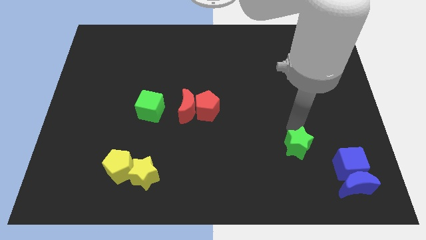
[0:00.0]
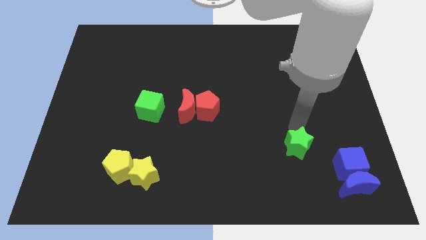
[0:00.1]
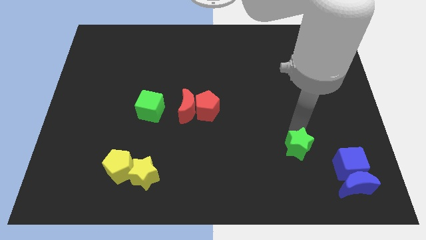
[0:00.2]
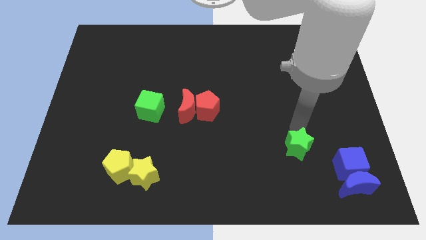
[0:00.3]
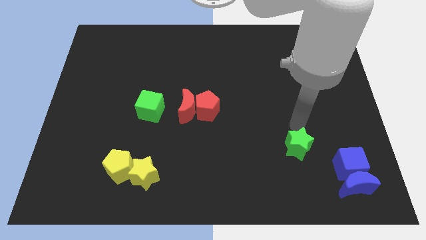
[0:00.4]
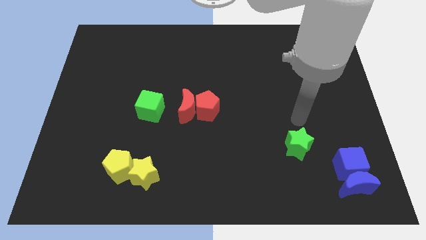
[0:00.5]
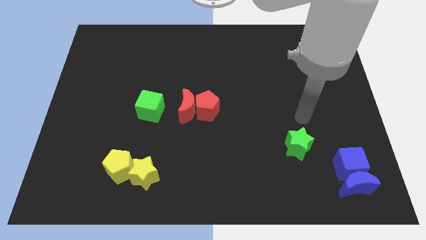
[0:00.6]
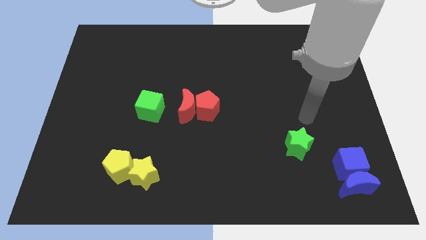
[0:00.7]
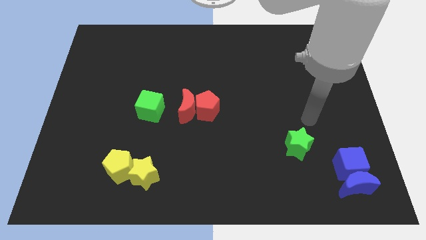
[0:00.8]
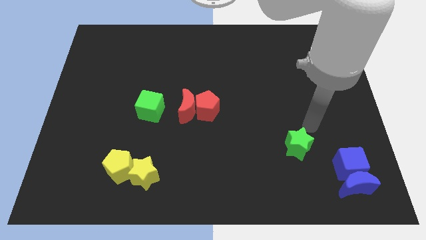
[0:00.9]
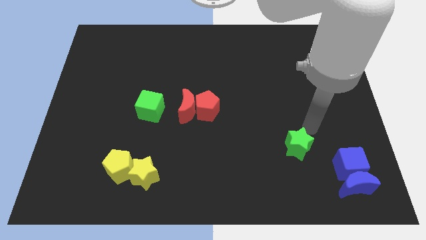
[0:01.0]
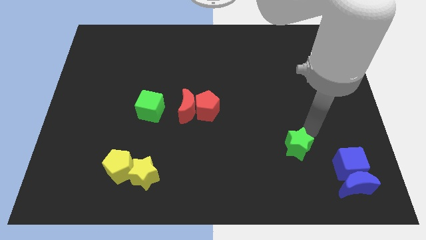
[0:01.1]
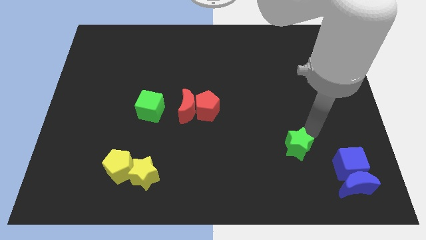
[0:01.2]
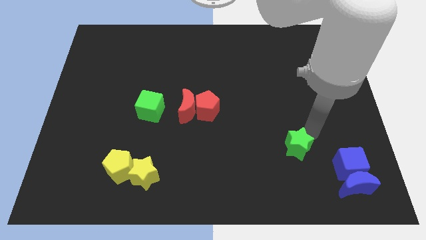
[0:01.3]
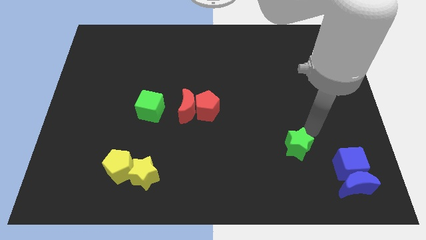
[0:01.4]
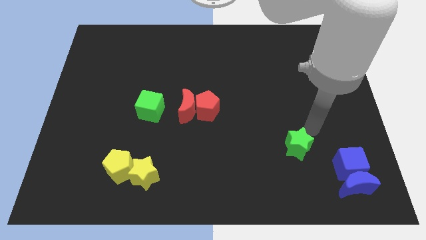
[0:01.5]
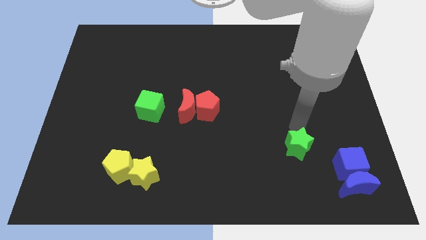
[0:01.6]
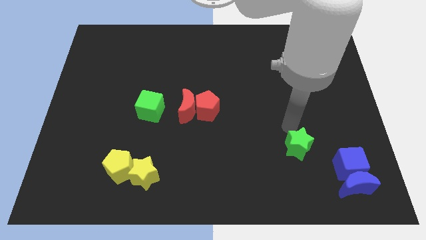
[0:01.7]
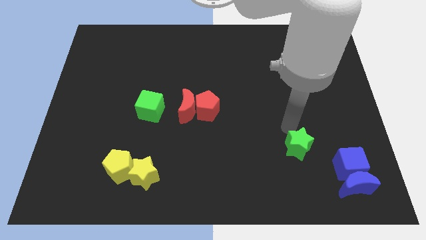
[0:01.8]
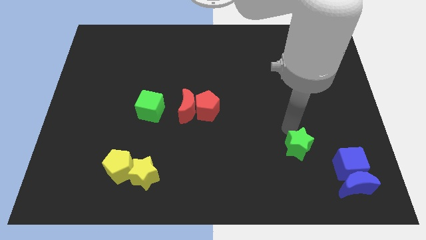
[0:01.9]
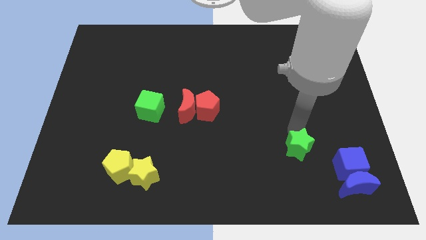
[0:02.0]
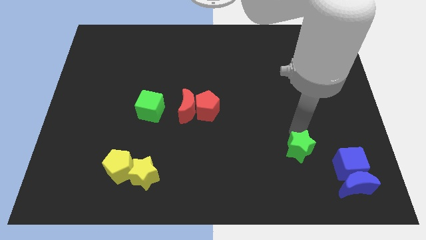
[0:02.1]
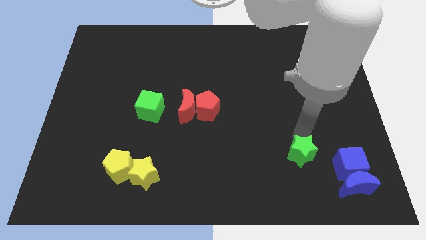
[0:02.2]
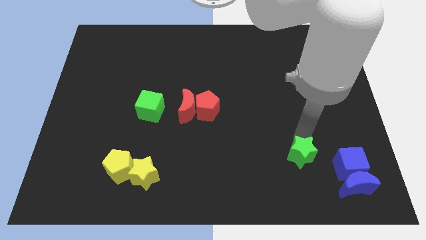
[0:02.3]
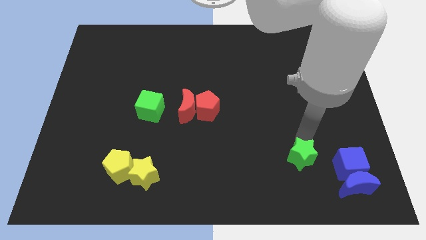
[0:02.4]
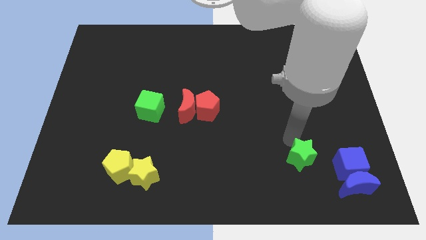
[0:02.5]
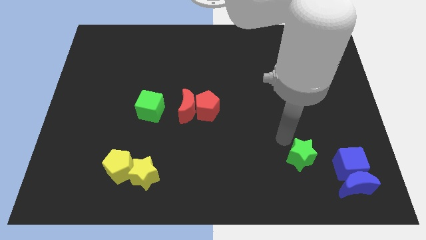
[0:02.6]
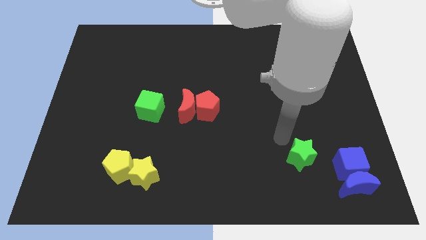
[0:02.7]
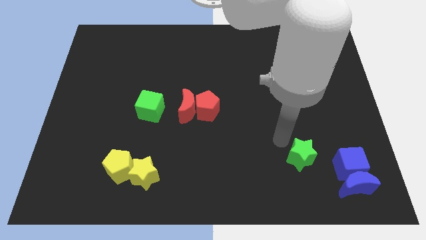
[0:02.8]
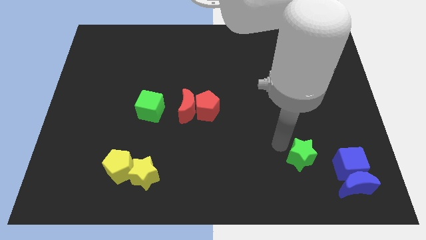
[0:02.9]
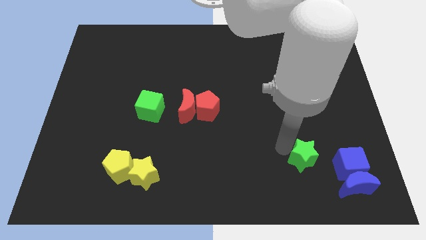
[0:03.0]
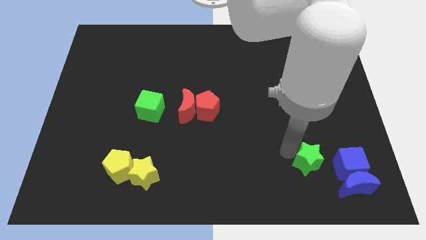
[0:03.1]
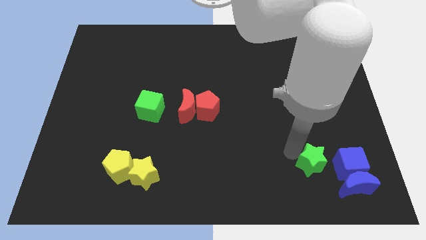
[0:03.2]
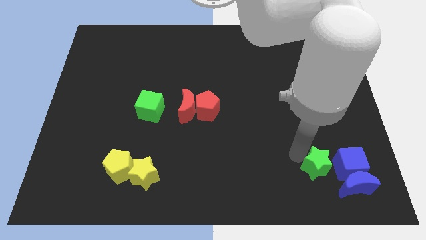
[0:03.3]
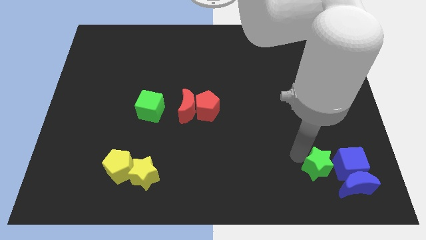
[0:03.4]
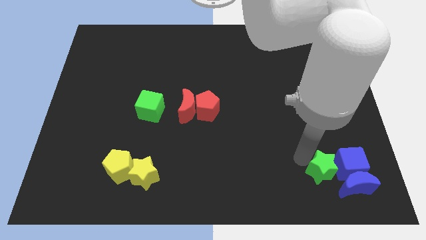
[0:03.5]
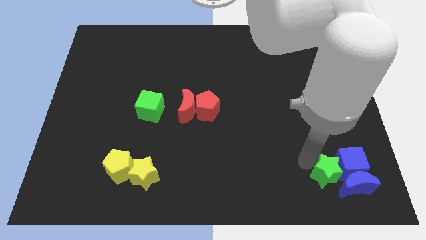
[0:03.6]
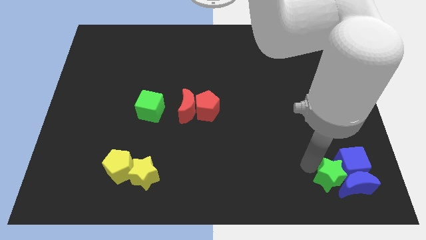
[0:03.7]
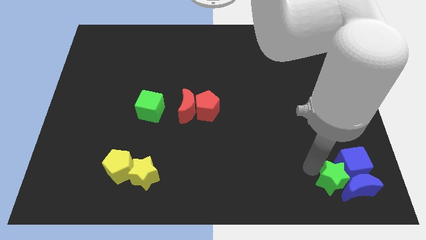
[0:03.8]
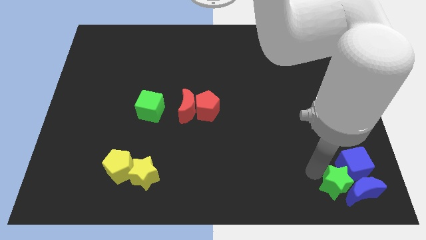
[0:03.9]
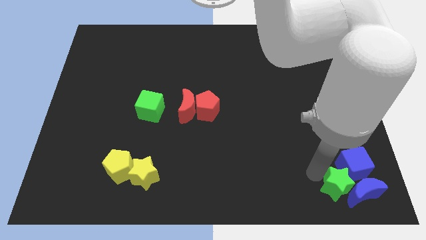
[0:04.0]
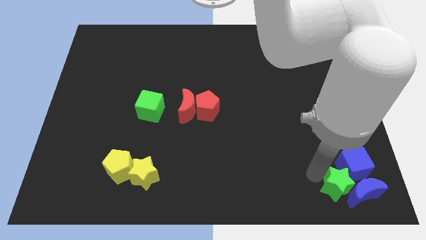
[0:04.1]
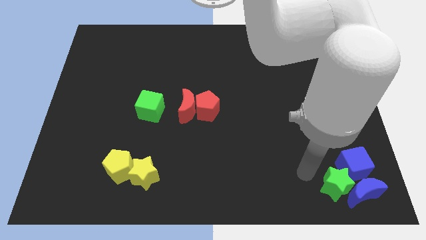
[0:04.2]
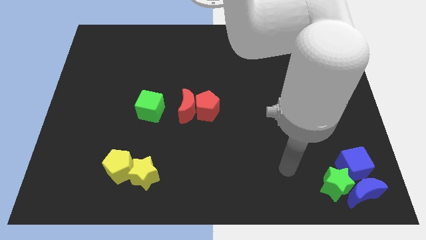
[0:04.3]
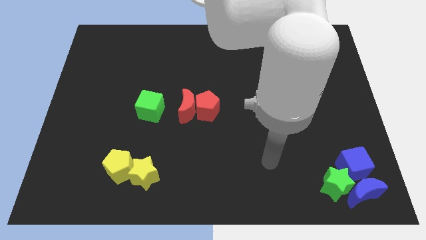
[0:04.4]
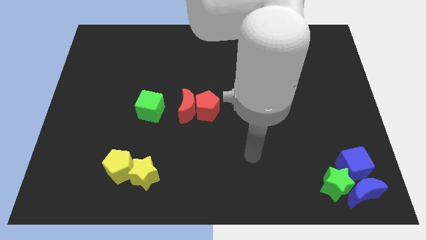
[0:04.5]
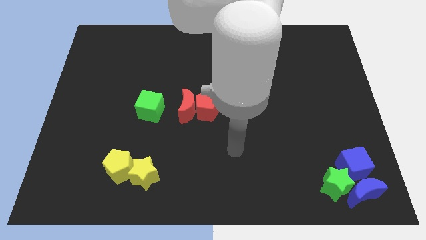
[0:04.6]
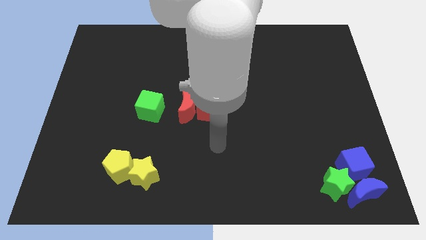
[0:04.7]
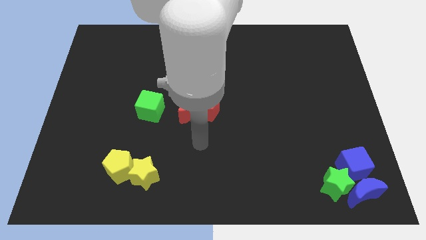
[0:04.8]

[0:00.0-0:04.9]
push the blue moon with the green star

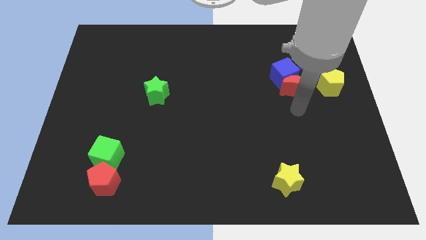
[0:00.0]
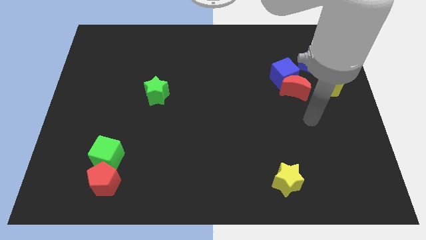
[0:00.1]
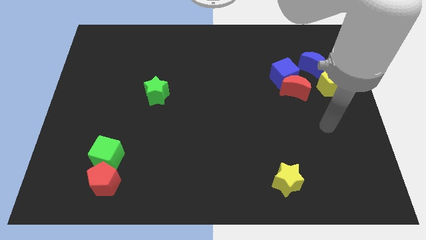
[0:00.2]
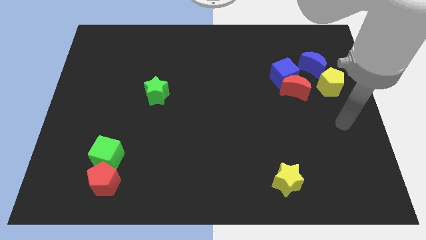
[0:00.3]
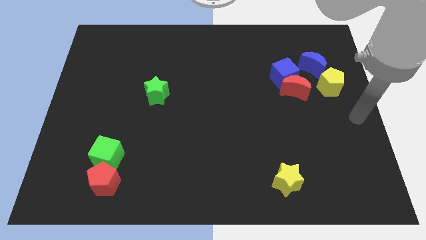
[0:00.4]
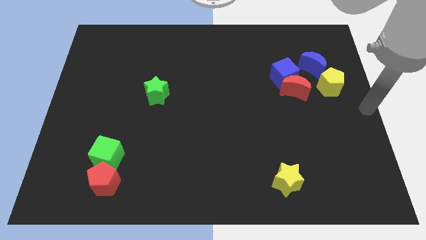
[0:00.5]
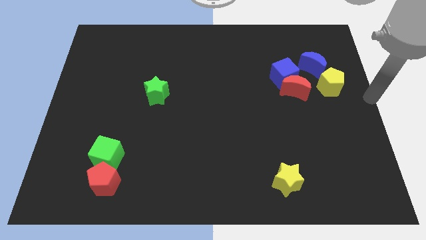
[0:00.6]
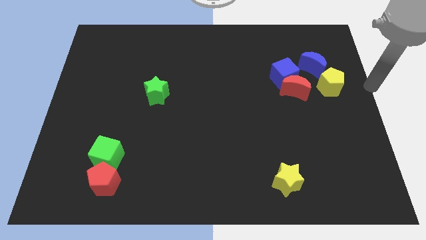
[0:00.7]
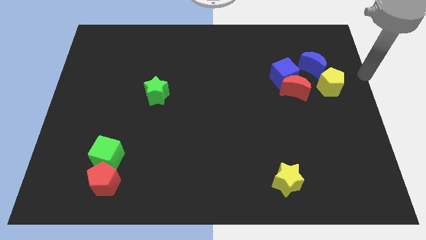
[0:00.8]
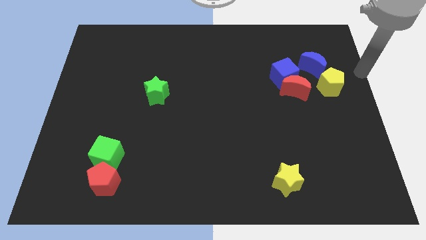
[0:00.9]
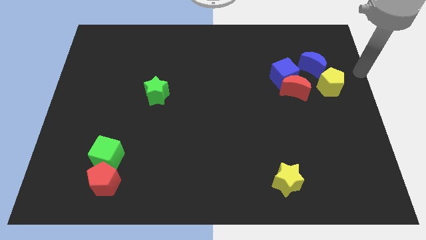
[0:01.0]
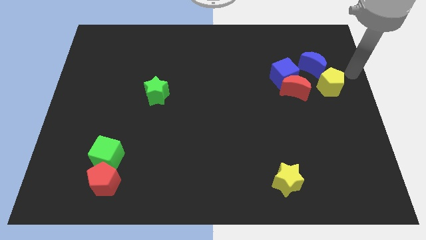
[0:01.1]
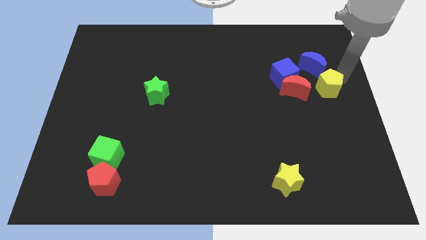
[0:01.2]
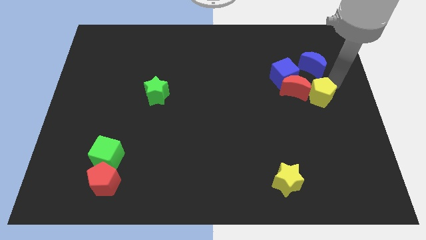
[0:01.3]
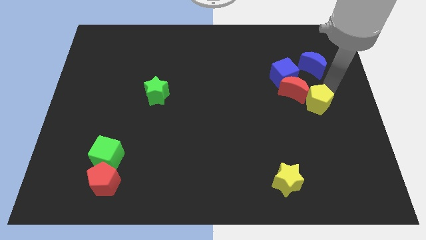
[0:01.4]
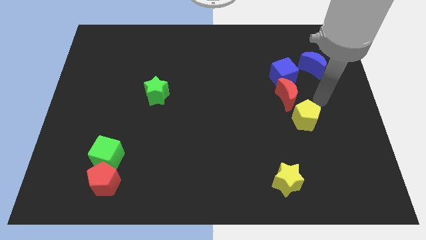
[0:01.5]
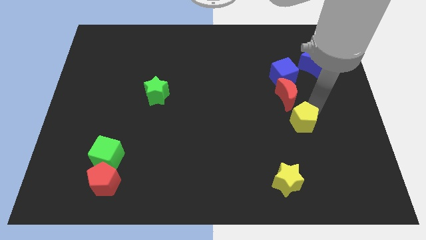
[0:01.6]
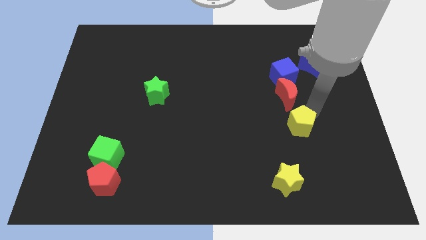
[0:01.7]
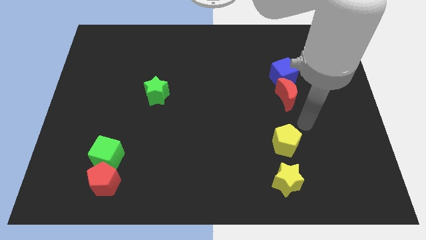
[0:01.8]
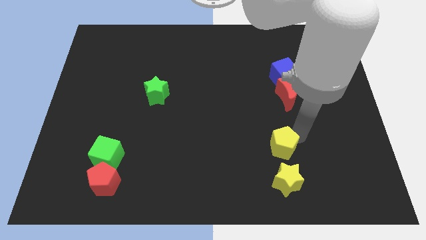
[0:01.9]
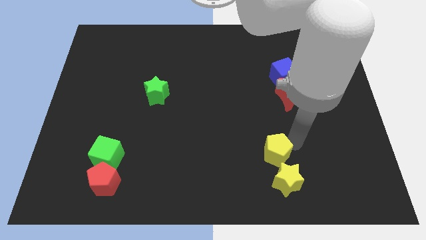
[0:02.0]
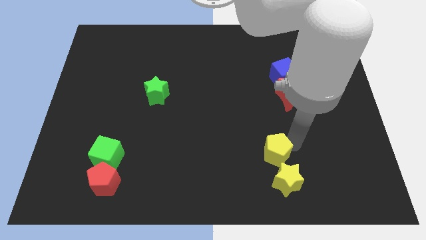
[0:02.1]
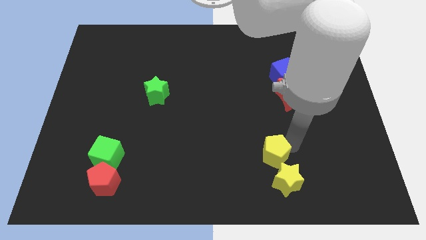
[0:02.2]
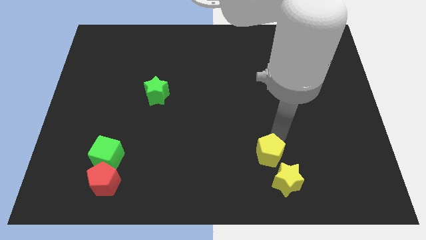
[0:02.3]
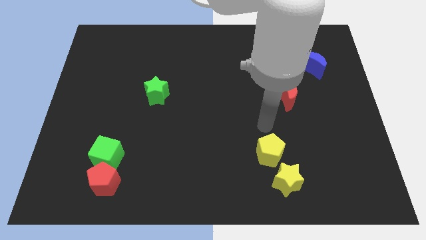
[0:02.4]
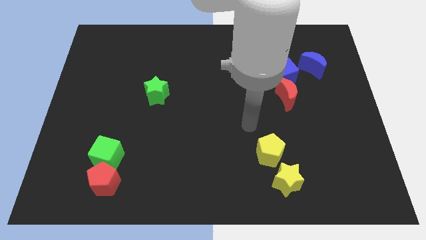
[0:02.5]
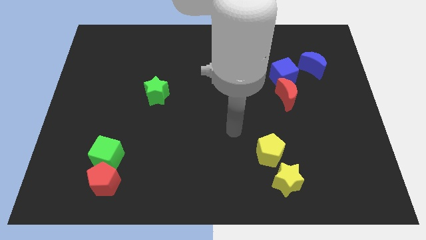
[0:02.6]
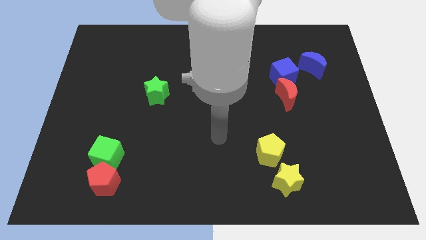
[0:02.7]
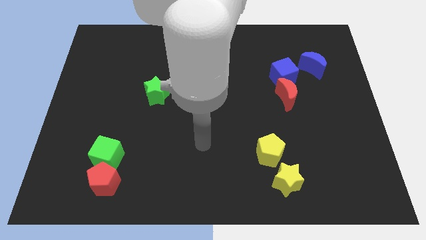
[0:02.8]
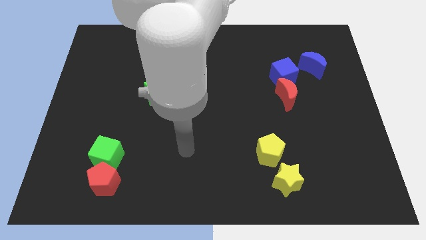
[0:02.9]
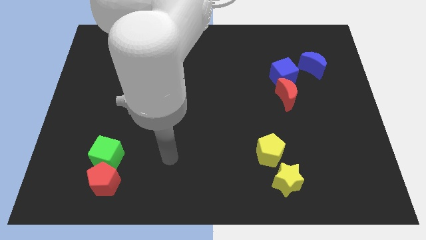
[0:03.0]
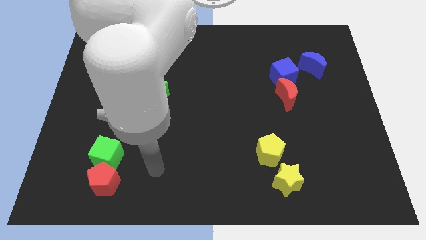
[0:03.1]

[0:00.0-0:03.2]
place the yellow pentagon top left to the yellow star

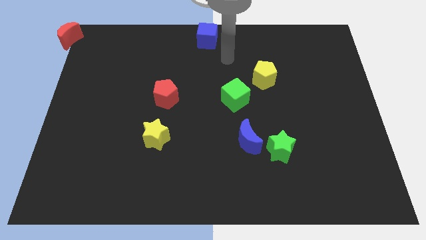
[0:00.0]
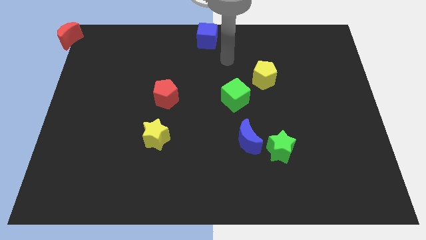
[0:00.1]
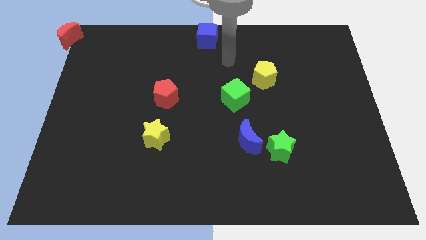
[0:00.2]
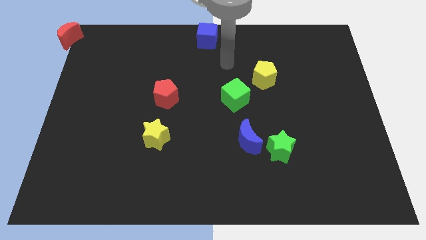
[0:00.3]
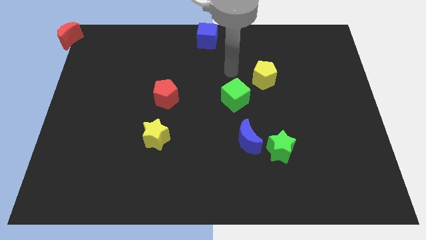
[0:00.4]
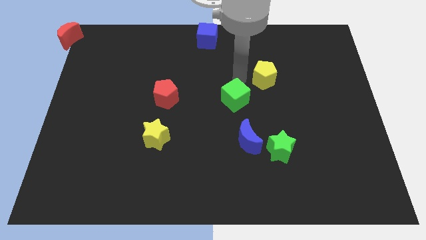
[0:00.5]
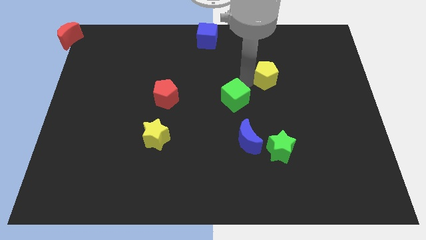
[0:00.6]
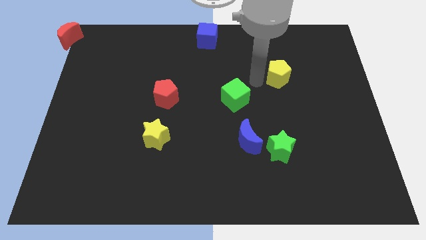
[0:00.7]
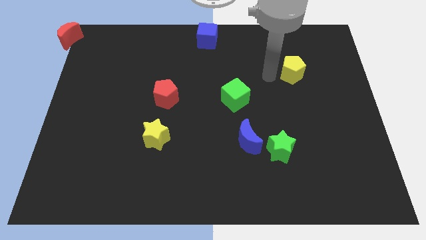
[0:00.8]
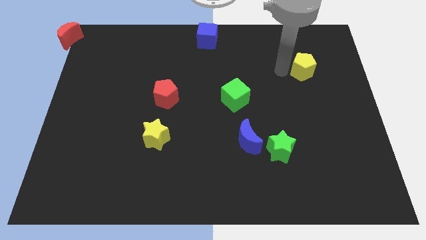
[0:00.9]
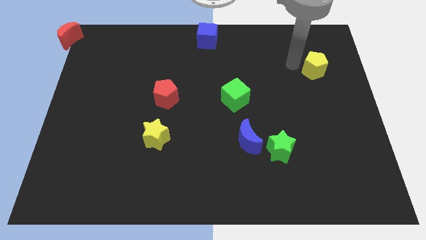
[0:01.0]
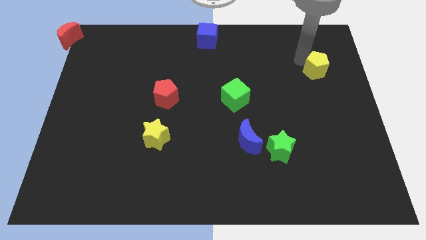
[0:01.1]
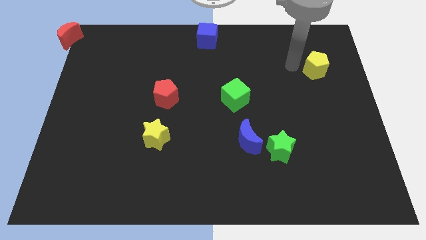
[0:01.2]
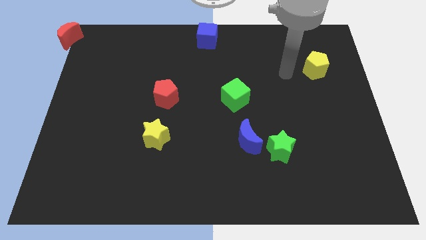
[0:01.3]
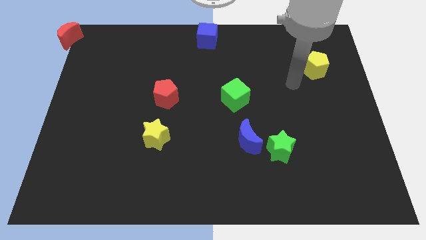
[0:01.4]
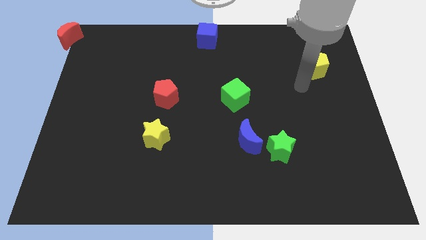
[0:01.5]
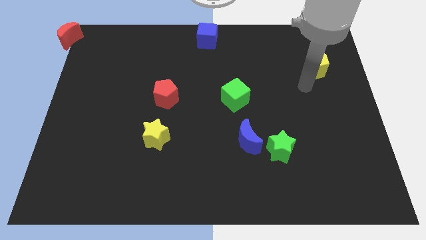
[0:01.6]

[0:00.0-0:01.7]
move the yellow pentagon to the right side of the board
